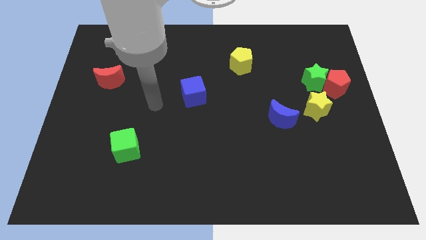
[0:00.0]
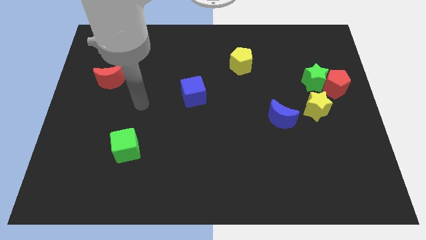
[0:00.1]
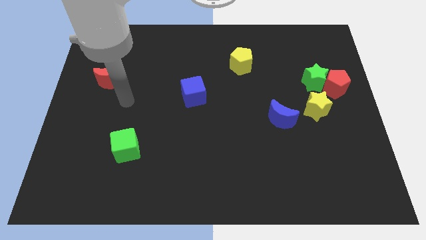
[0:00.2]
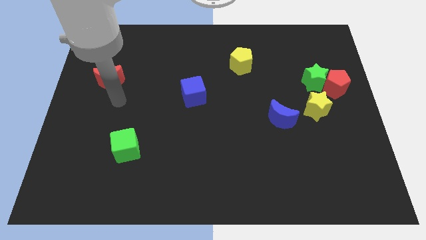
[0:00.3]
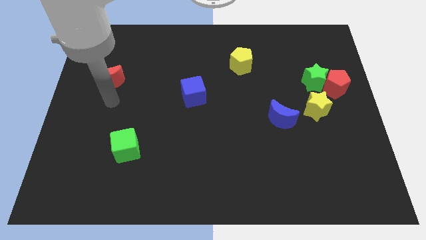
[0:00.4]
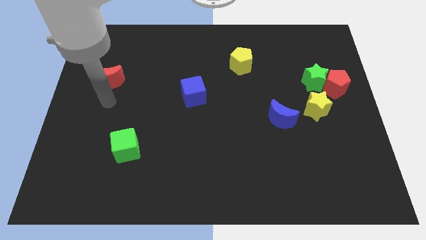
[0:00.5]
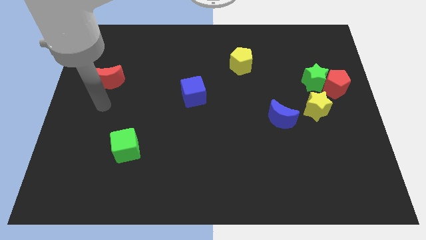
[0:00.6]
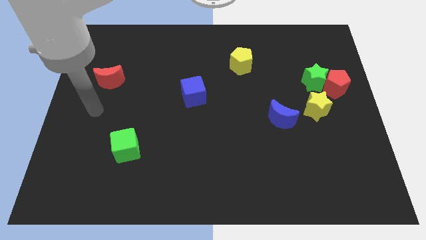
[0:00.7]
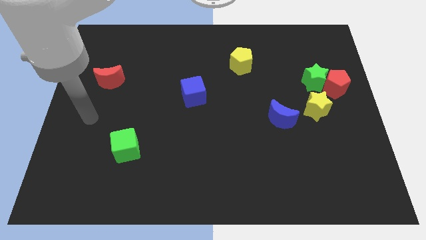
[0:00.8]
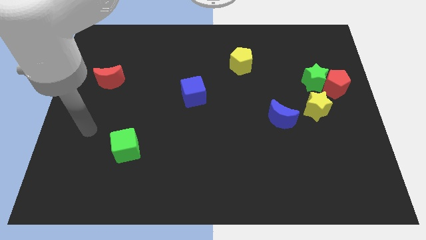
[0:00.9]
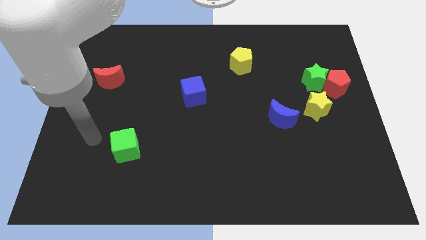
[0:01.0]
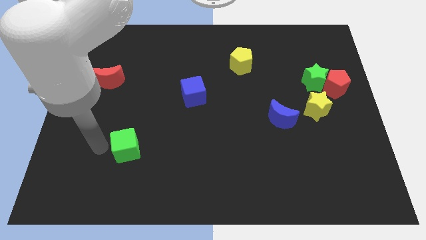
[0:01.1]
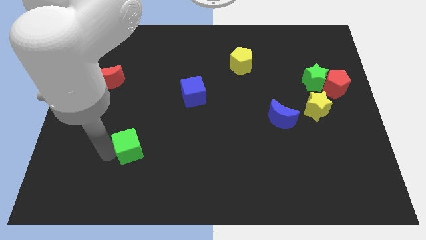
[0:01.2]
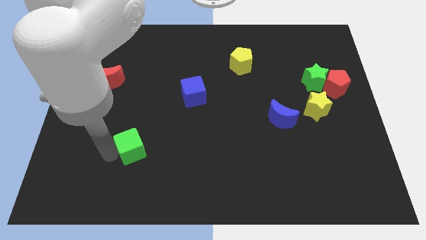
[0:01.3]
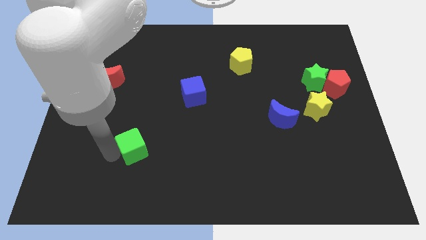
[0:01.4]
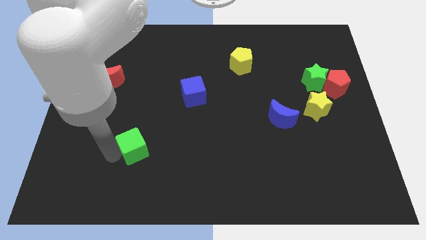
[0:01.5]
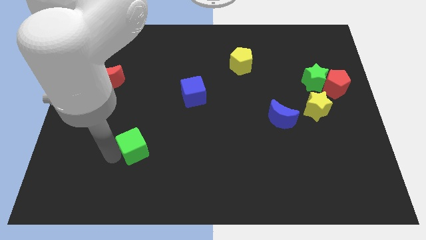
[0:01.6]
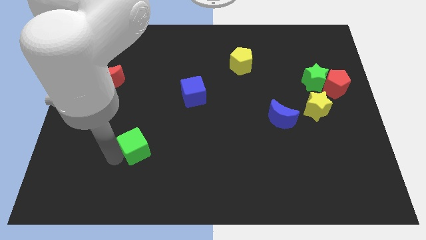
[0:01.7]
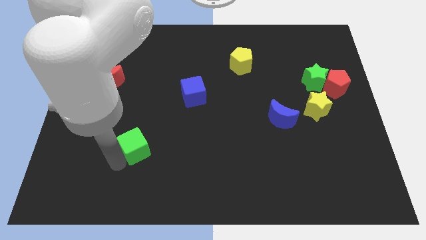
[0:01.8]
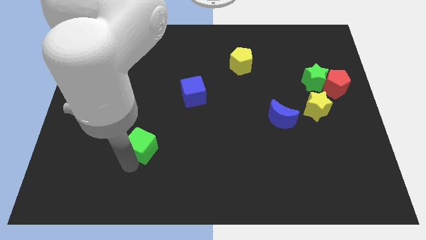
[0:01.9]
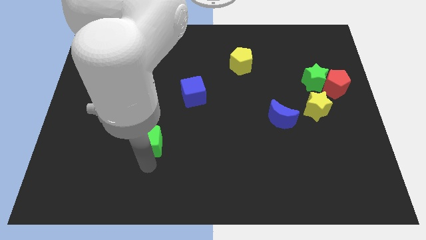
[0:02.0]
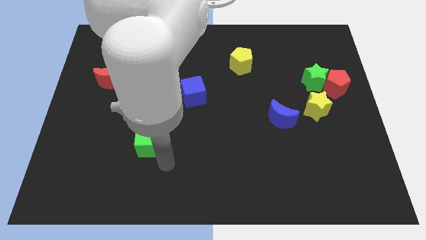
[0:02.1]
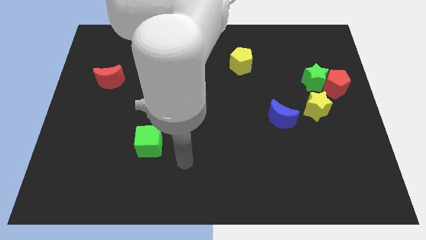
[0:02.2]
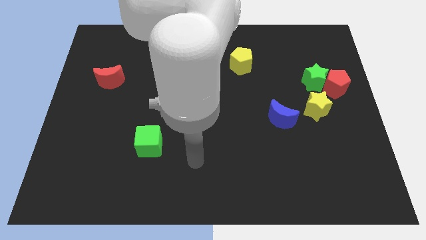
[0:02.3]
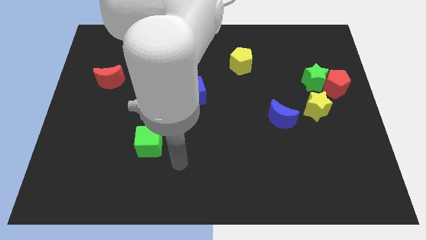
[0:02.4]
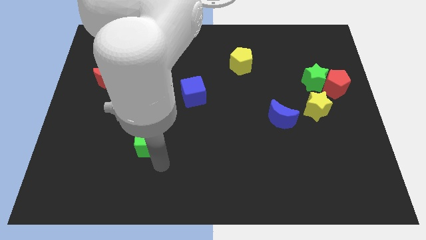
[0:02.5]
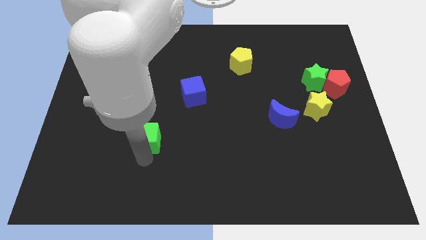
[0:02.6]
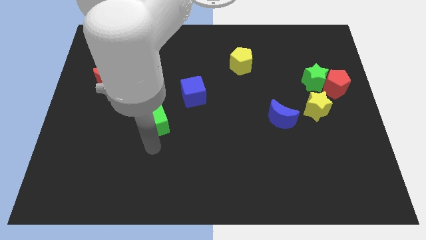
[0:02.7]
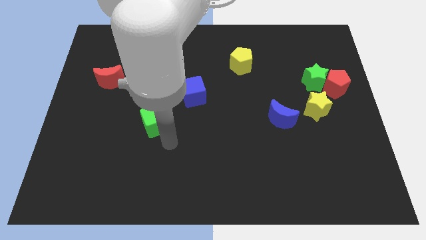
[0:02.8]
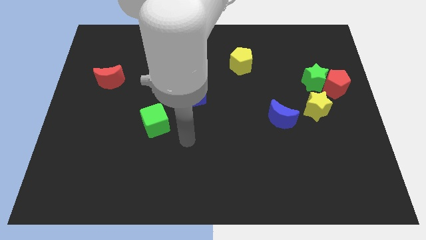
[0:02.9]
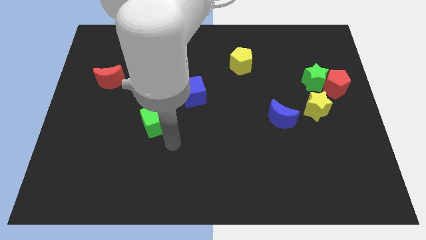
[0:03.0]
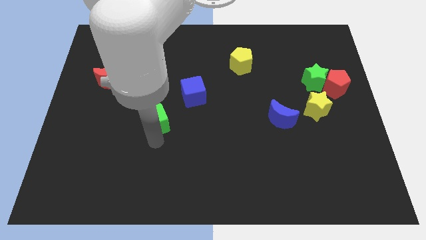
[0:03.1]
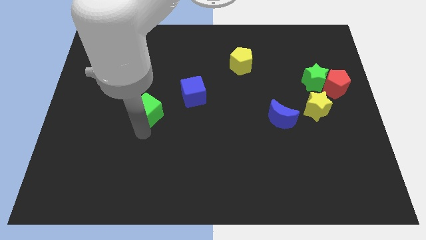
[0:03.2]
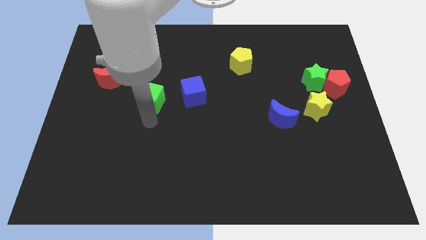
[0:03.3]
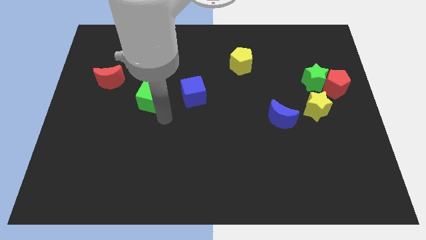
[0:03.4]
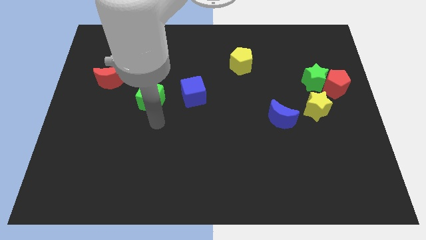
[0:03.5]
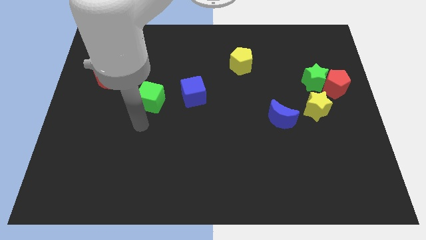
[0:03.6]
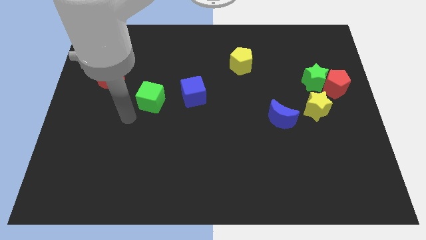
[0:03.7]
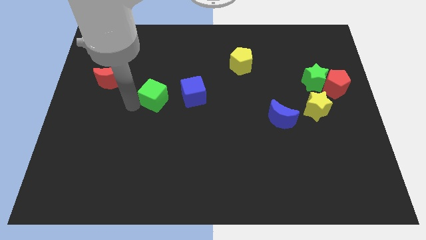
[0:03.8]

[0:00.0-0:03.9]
place the green cube parallel to blue cube

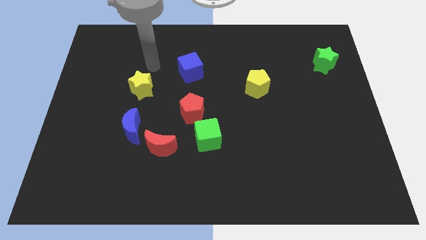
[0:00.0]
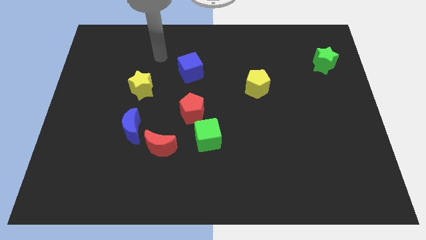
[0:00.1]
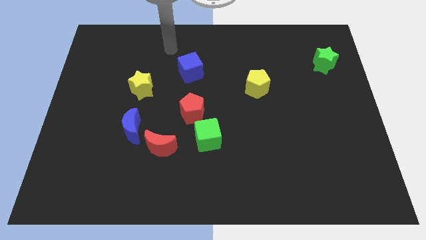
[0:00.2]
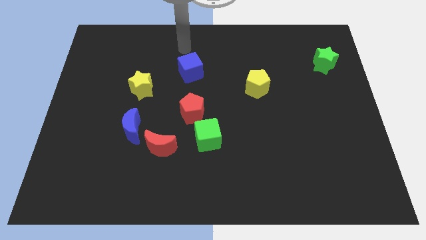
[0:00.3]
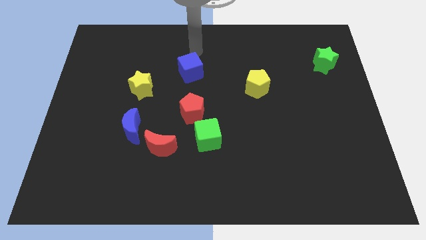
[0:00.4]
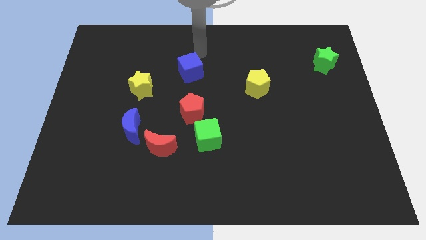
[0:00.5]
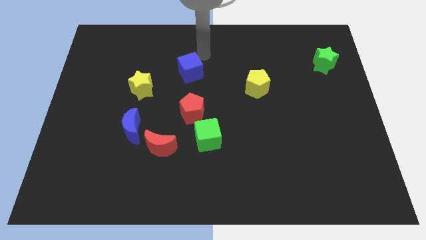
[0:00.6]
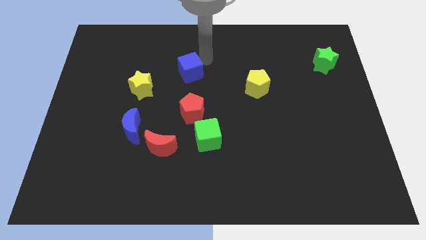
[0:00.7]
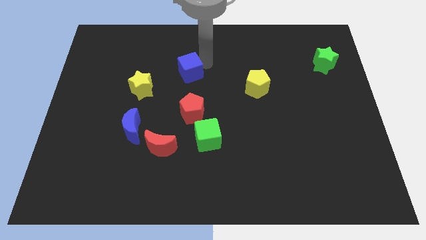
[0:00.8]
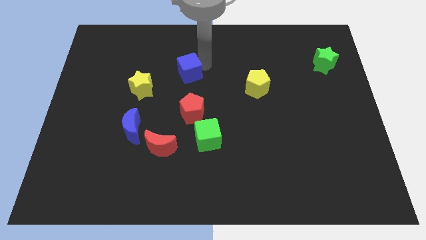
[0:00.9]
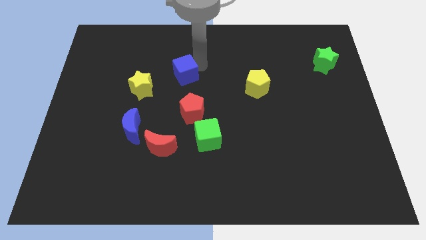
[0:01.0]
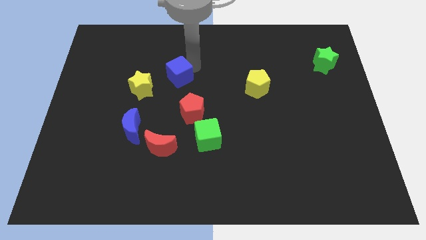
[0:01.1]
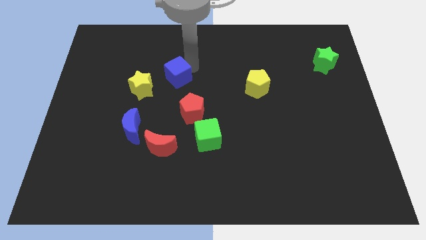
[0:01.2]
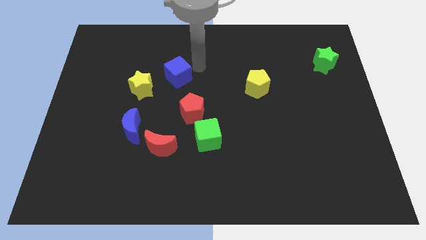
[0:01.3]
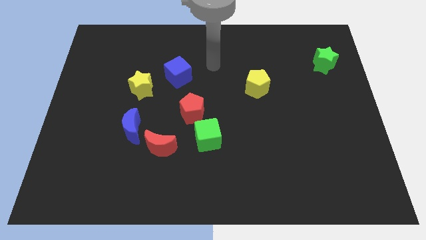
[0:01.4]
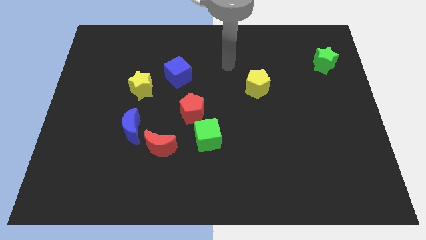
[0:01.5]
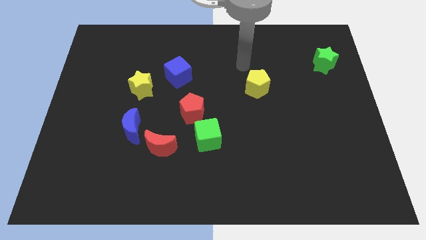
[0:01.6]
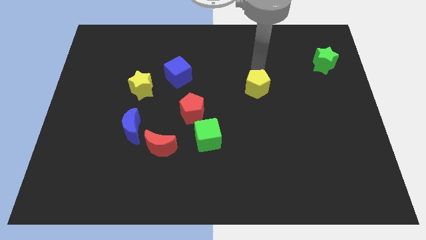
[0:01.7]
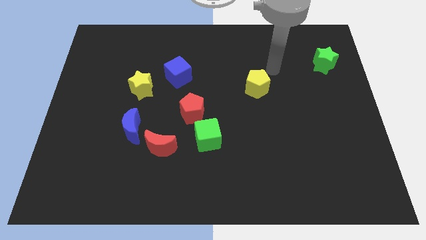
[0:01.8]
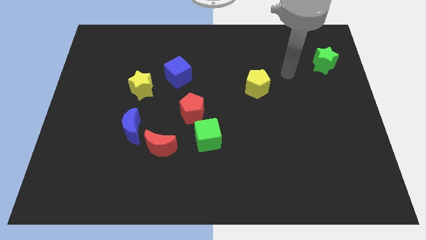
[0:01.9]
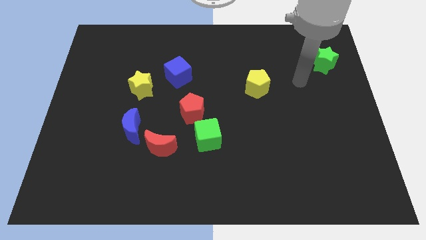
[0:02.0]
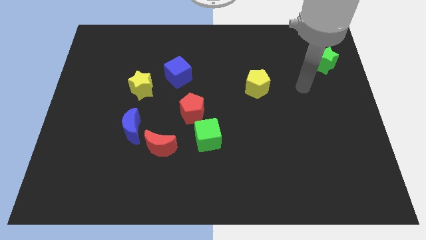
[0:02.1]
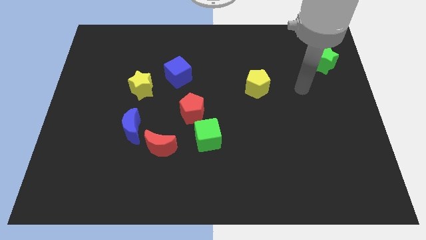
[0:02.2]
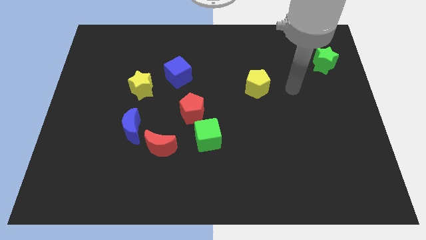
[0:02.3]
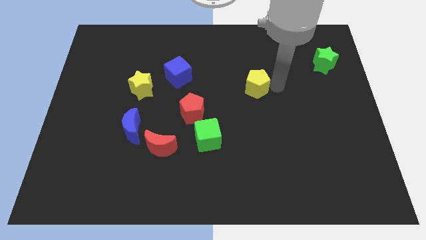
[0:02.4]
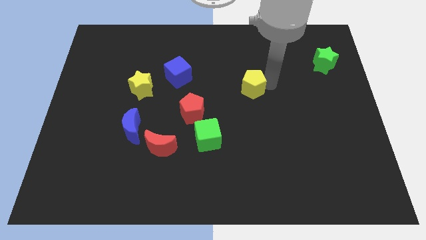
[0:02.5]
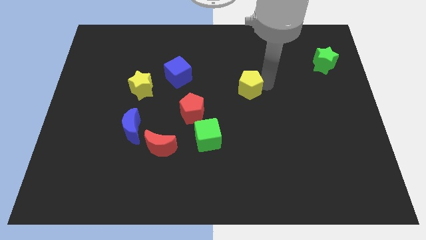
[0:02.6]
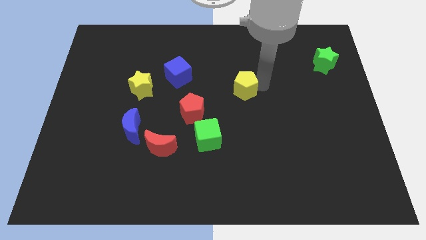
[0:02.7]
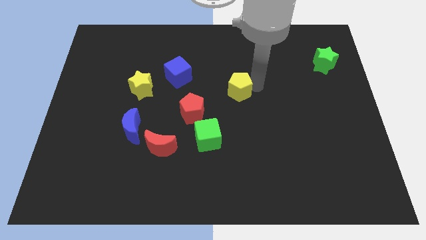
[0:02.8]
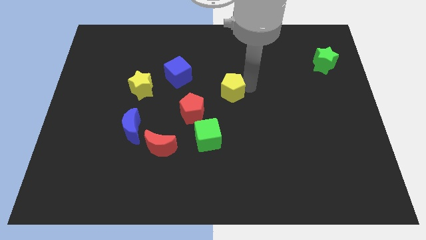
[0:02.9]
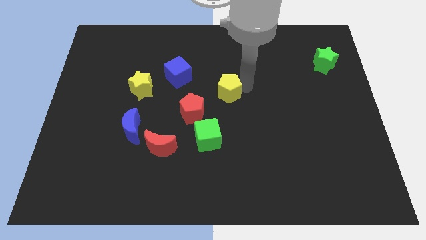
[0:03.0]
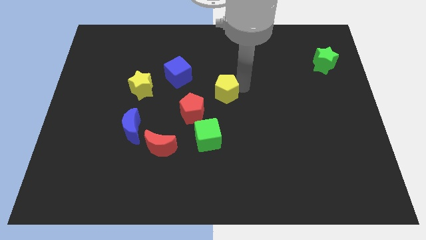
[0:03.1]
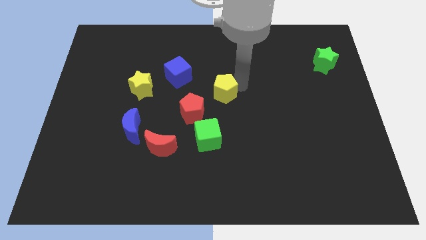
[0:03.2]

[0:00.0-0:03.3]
push the blue cube and the yellow pentagon slightly to the left

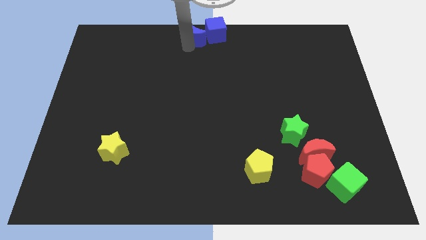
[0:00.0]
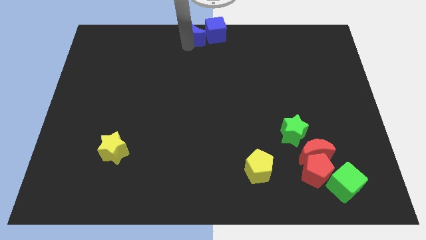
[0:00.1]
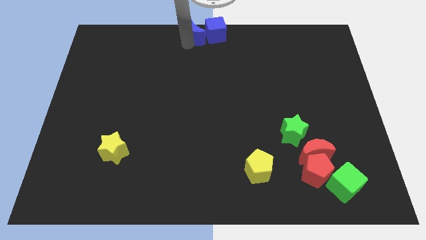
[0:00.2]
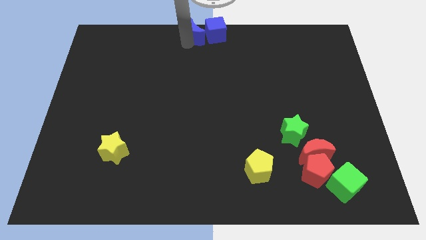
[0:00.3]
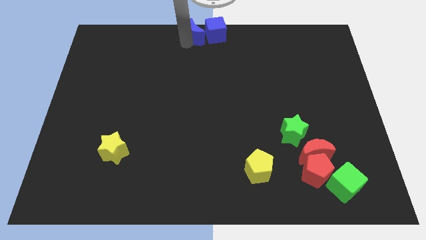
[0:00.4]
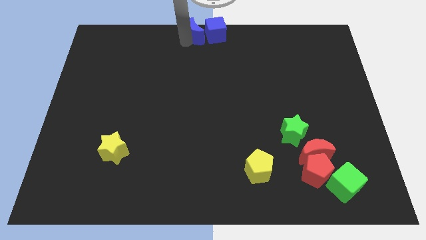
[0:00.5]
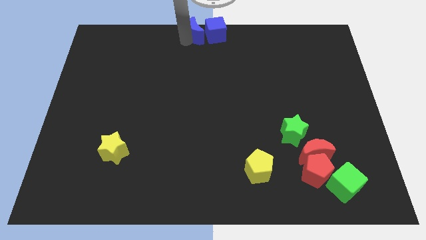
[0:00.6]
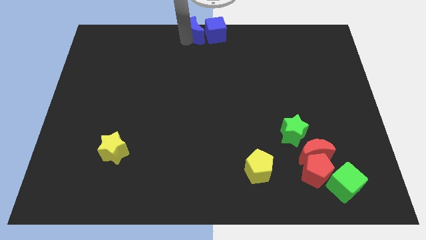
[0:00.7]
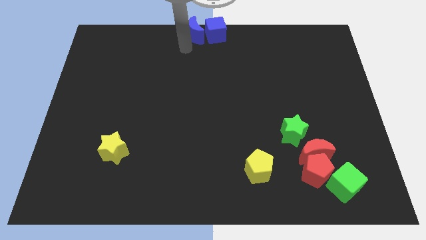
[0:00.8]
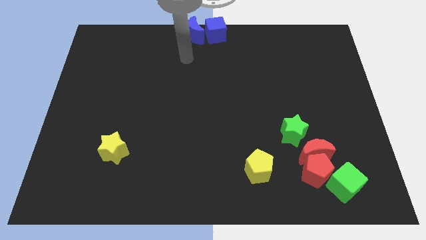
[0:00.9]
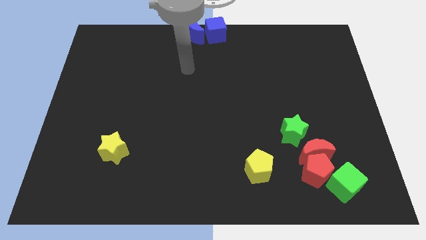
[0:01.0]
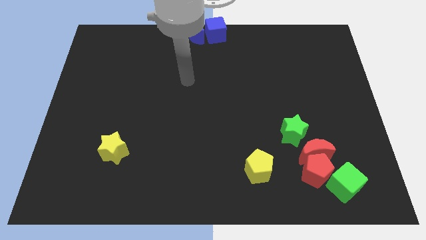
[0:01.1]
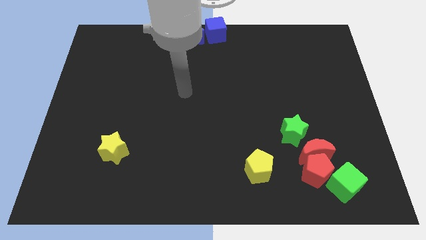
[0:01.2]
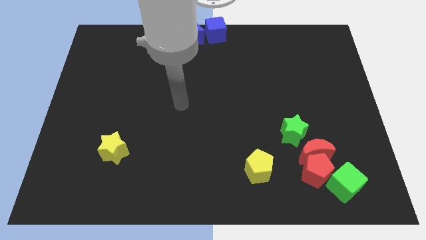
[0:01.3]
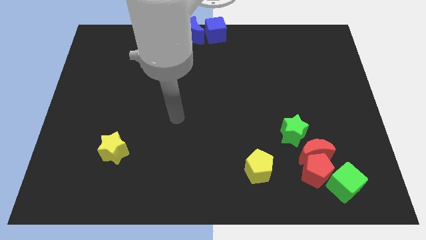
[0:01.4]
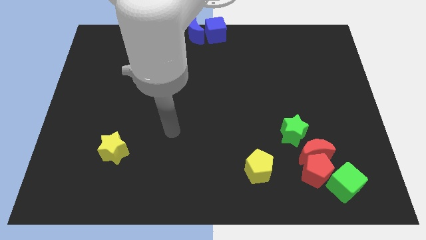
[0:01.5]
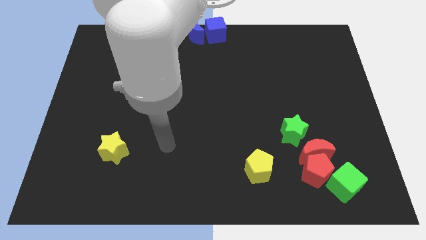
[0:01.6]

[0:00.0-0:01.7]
slightly push the blue crescent to the top center of the board
